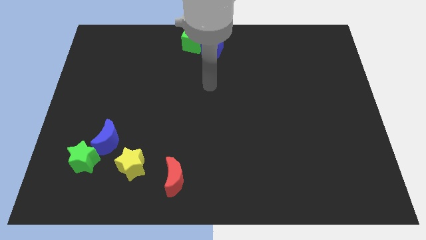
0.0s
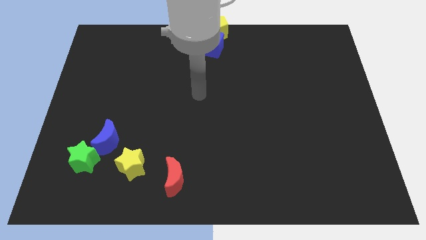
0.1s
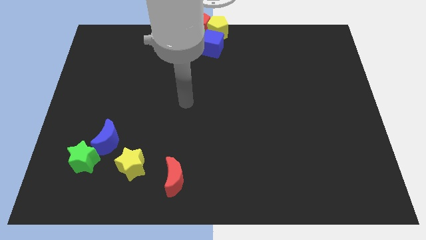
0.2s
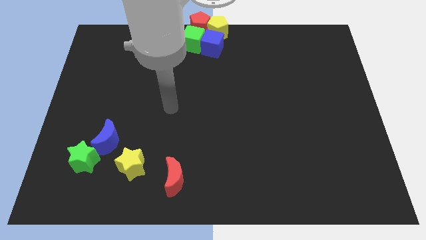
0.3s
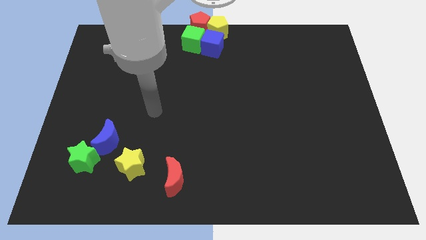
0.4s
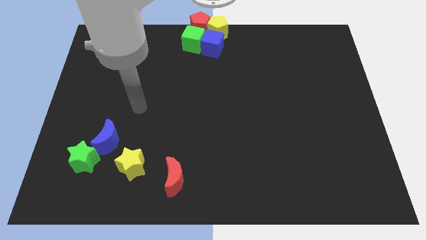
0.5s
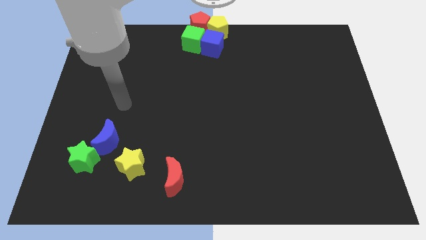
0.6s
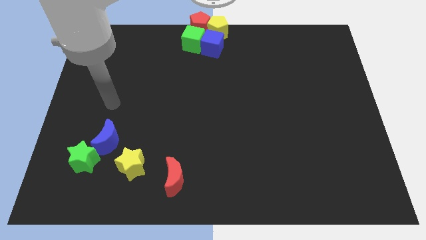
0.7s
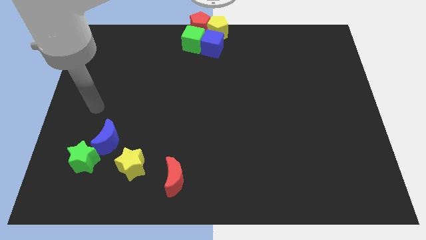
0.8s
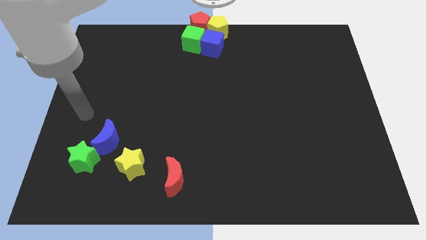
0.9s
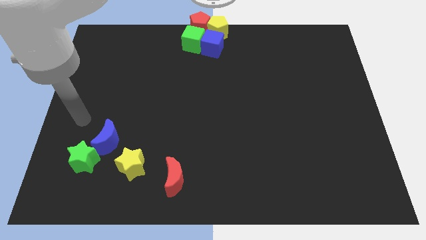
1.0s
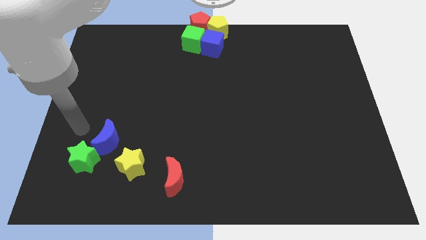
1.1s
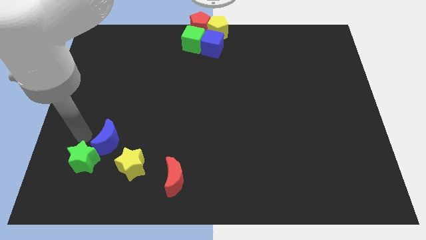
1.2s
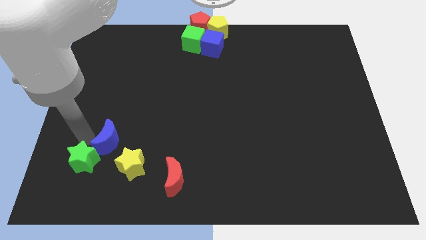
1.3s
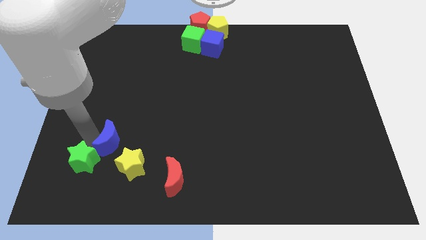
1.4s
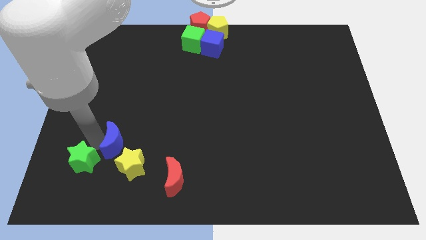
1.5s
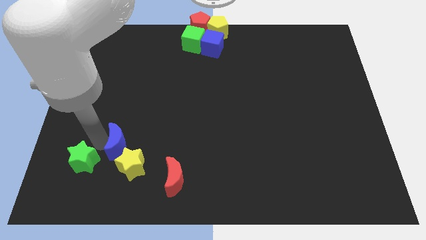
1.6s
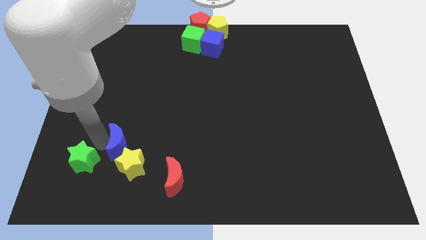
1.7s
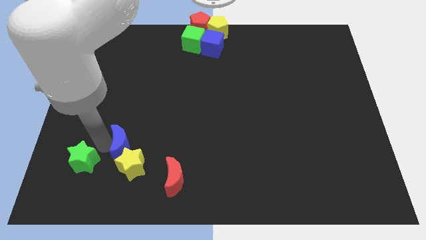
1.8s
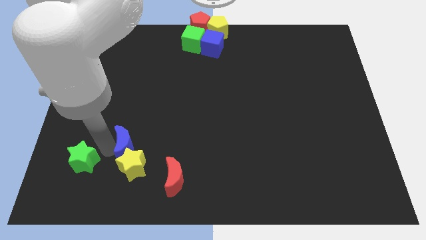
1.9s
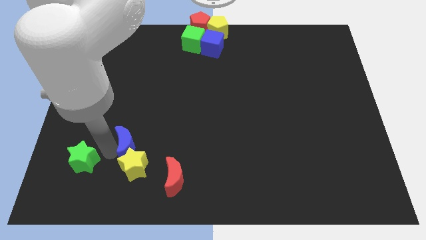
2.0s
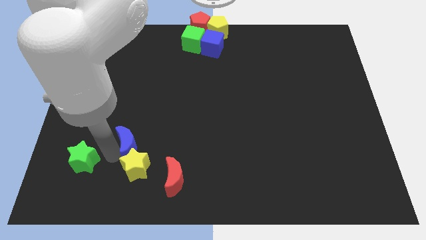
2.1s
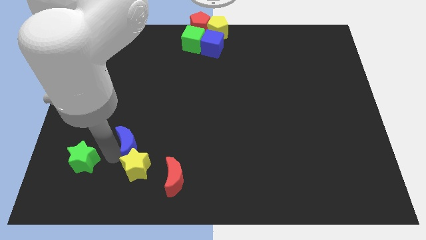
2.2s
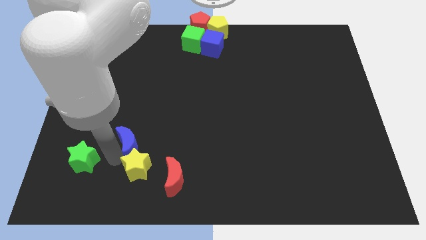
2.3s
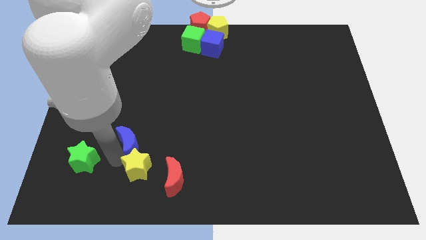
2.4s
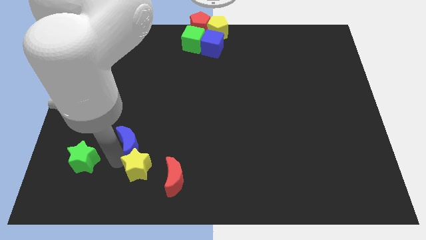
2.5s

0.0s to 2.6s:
push the blue moon into the yellow star

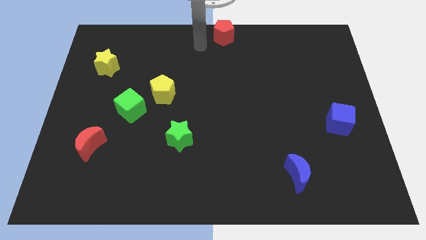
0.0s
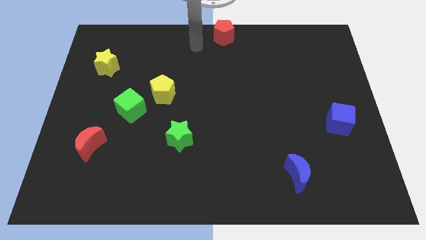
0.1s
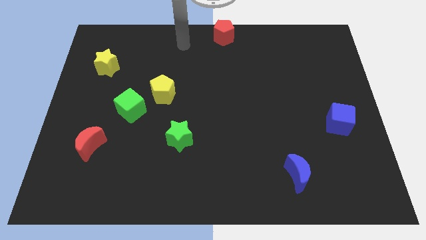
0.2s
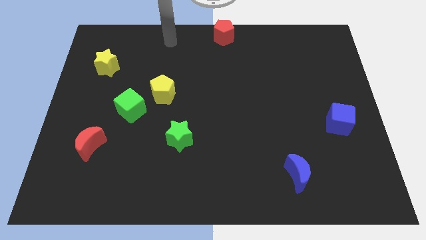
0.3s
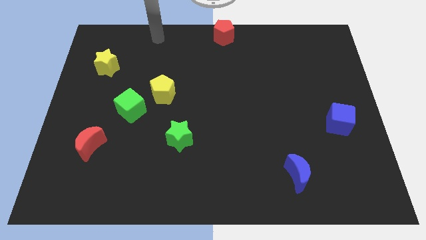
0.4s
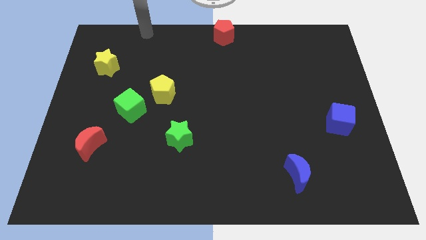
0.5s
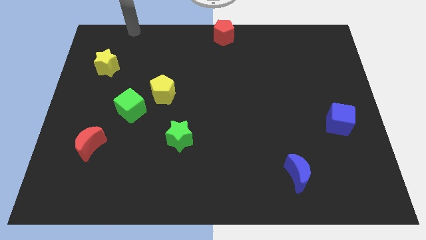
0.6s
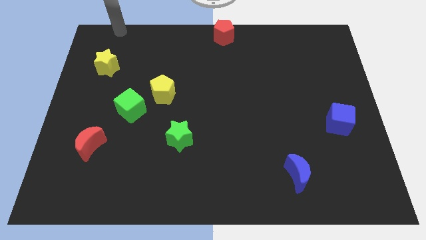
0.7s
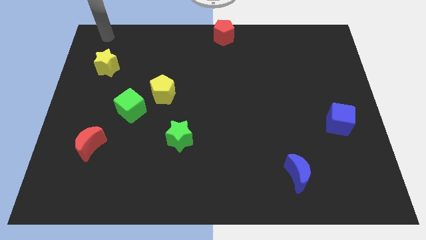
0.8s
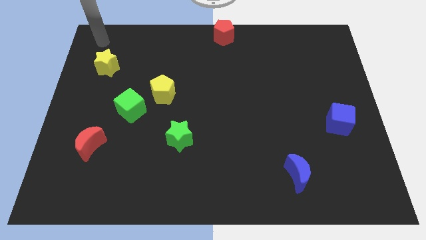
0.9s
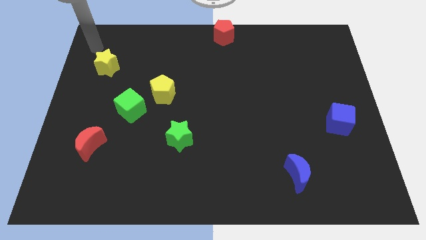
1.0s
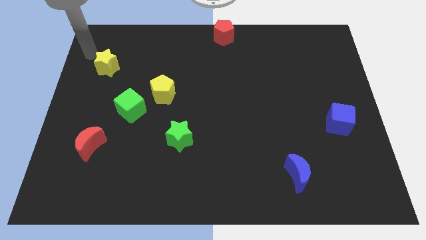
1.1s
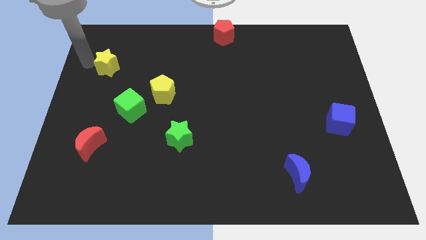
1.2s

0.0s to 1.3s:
point your arm at the left of the yellow star

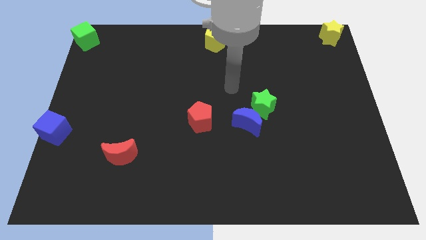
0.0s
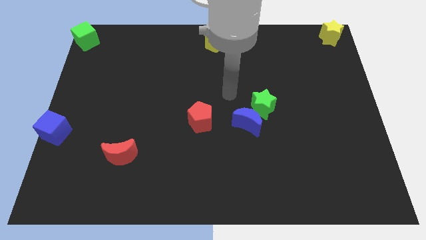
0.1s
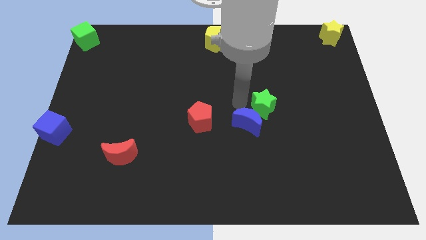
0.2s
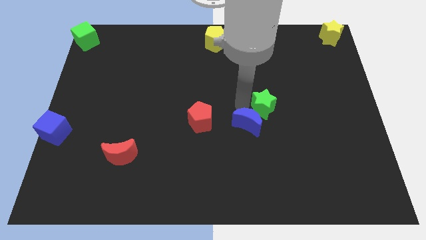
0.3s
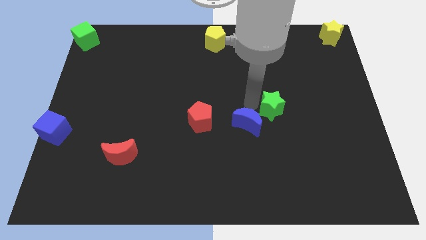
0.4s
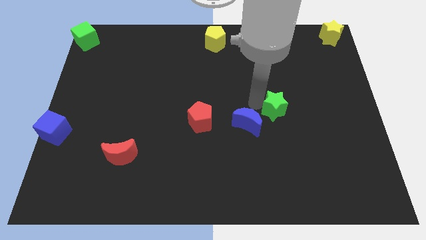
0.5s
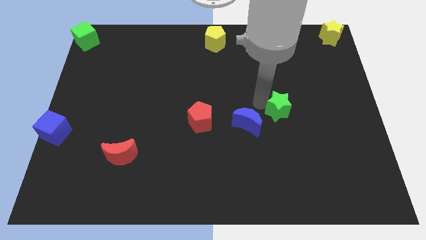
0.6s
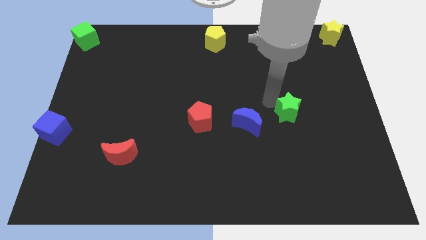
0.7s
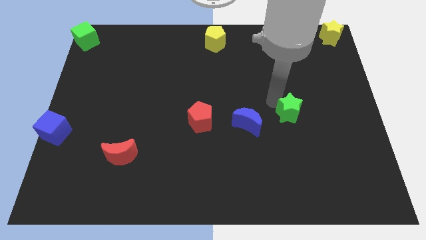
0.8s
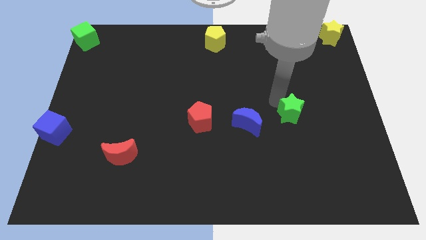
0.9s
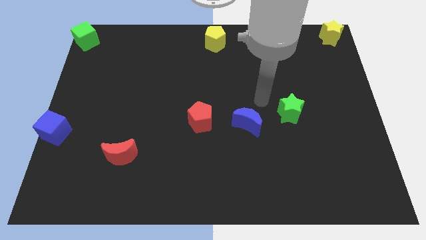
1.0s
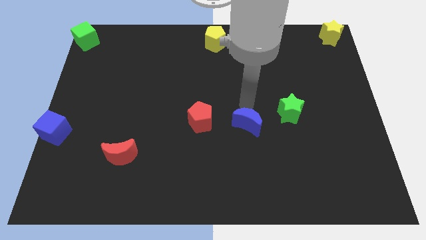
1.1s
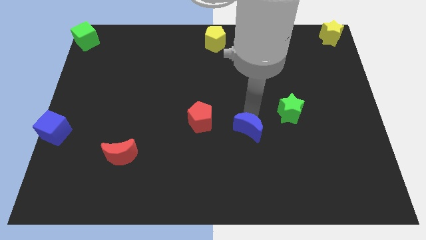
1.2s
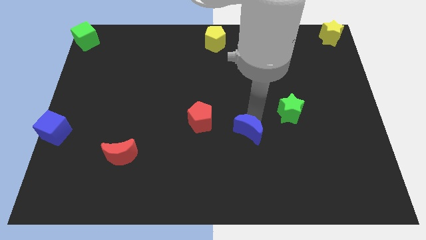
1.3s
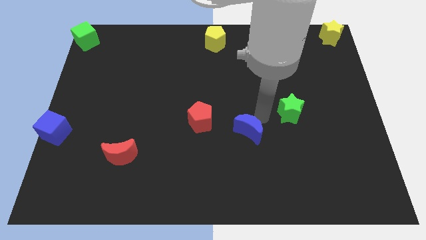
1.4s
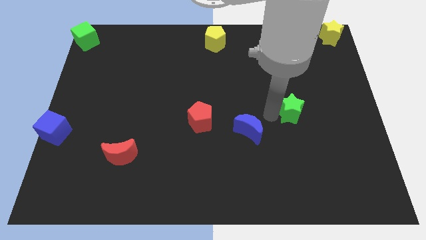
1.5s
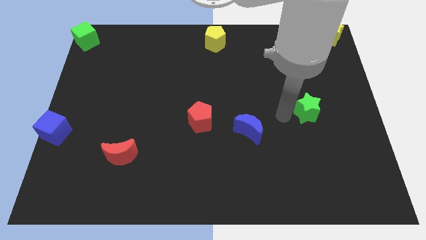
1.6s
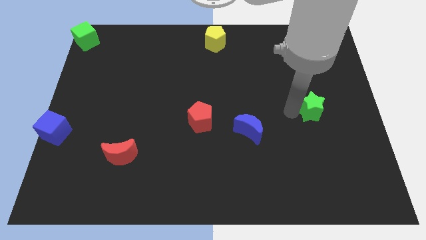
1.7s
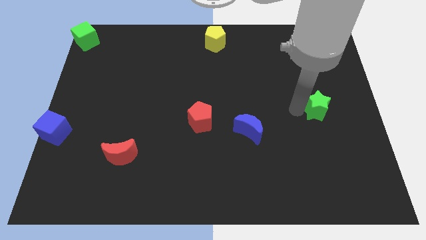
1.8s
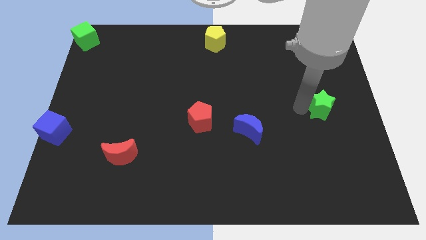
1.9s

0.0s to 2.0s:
separate the green star and blue crescent

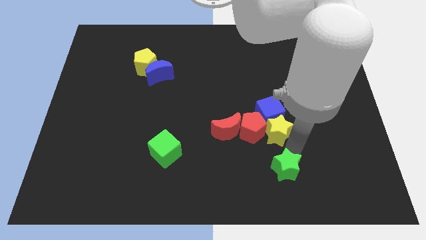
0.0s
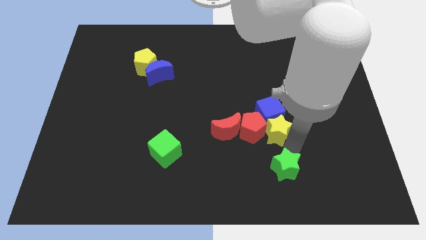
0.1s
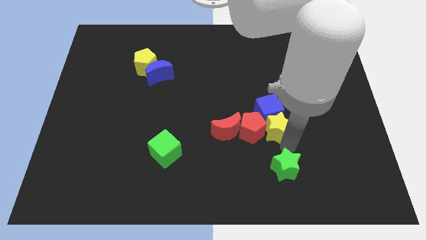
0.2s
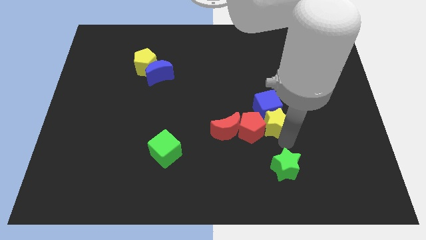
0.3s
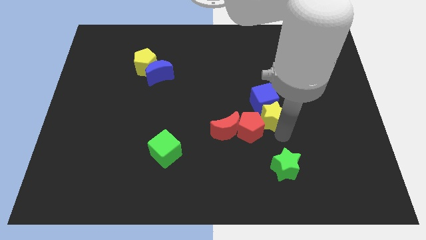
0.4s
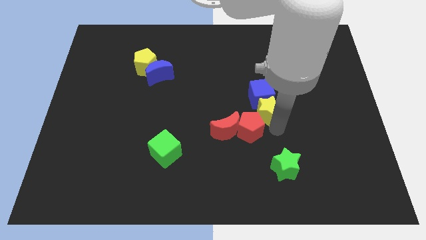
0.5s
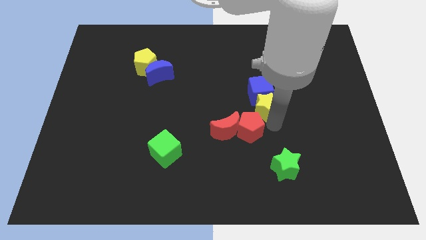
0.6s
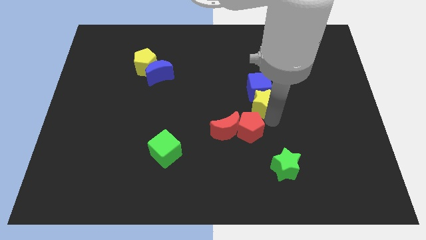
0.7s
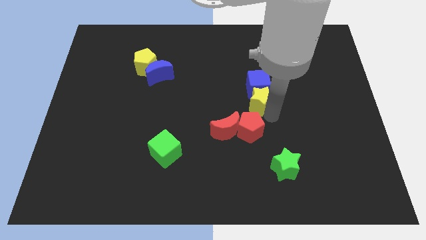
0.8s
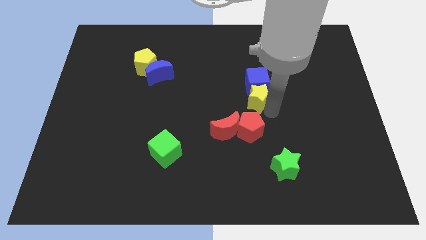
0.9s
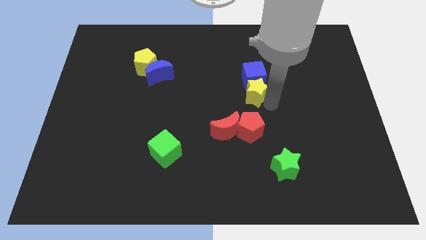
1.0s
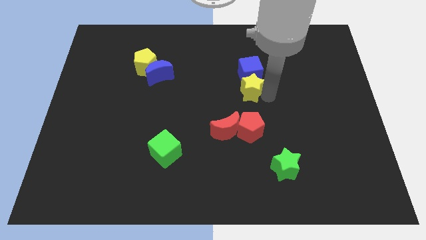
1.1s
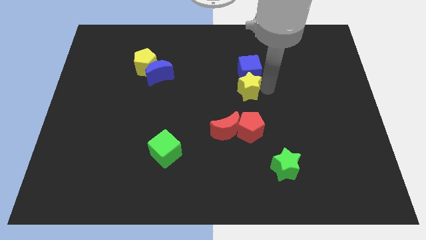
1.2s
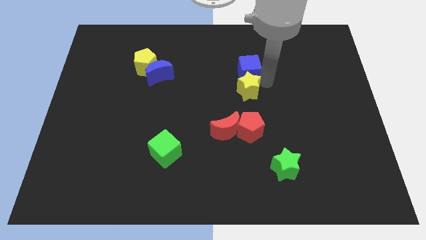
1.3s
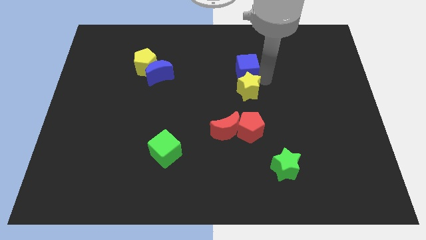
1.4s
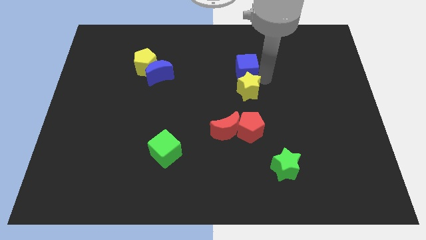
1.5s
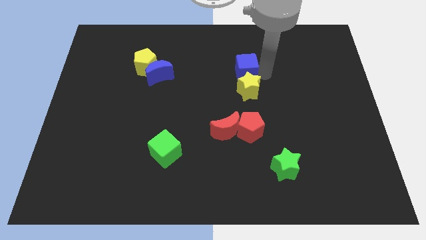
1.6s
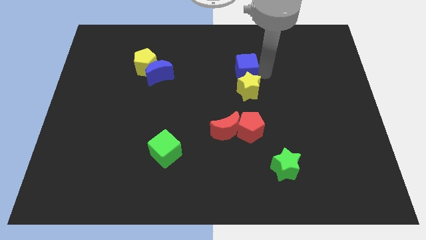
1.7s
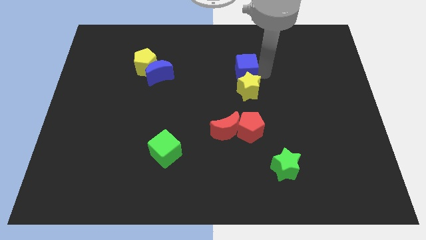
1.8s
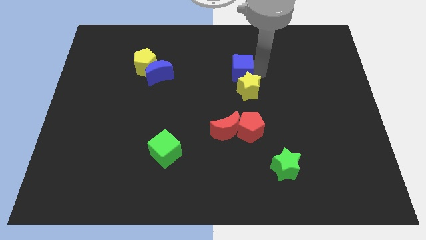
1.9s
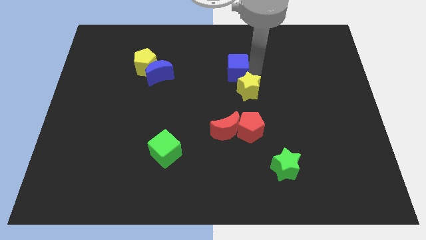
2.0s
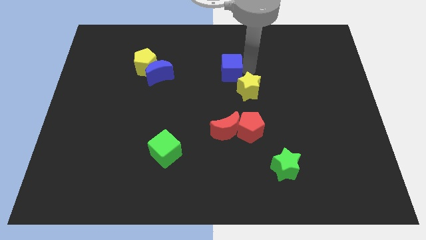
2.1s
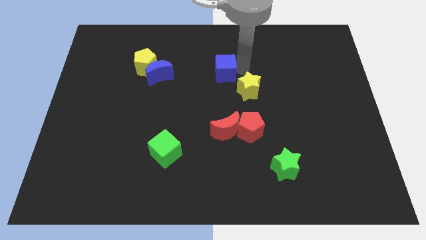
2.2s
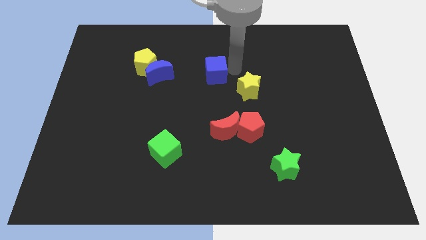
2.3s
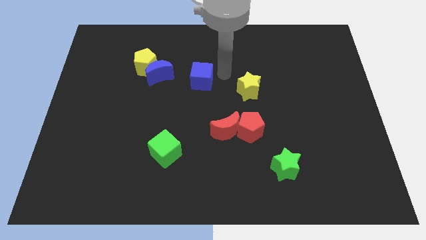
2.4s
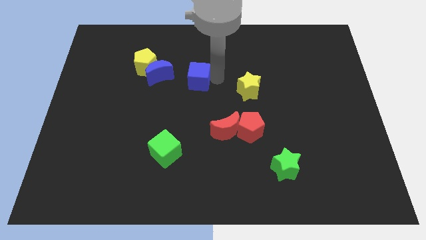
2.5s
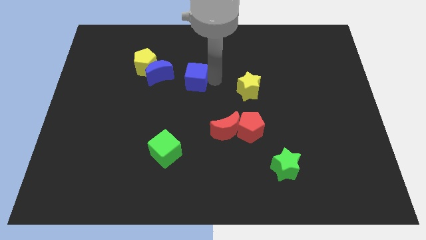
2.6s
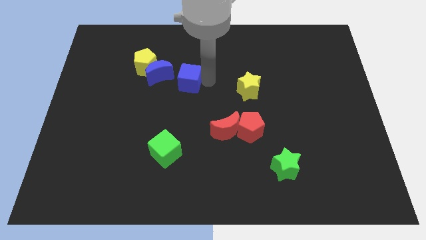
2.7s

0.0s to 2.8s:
place the blue cube diagonally right to the blue moon

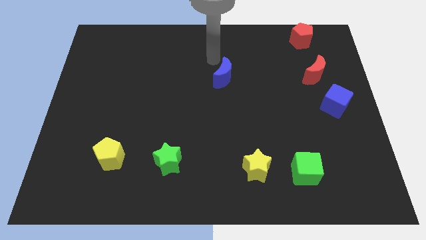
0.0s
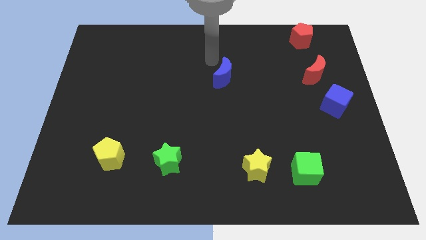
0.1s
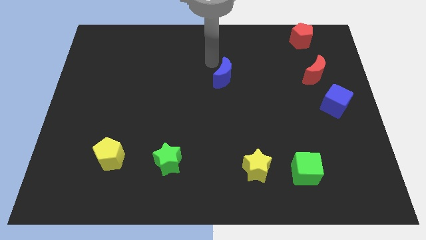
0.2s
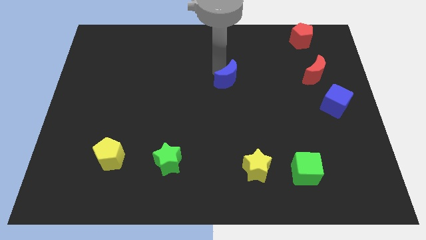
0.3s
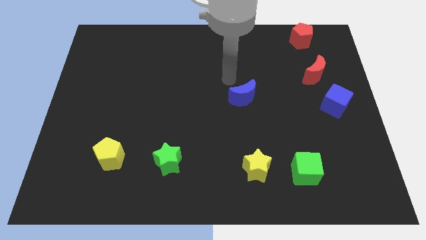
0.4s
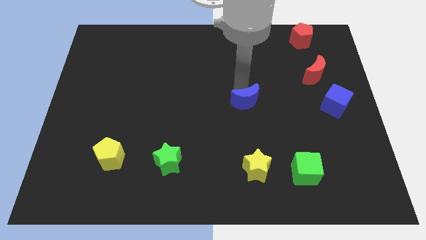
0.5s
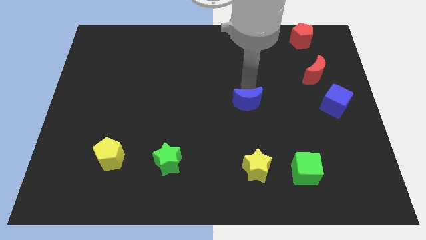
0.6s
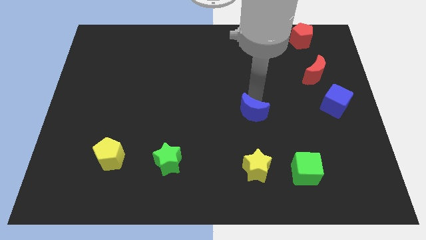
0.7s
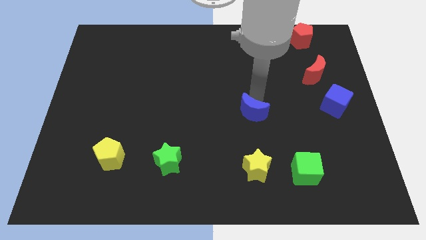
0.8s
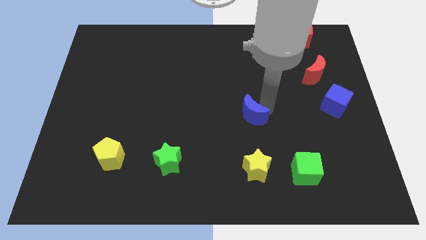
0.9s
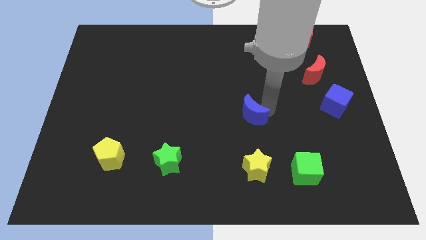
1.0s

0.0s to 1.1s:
move the blue crescent to the bottom of the board
